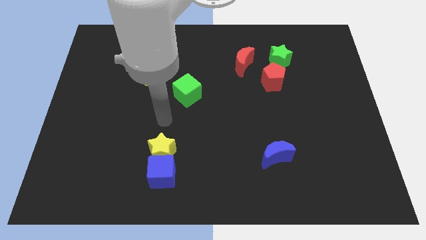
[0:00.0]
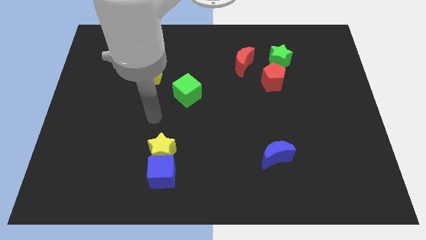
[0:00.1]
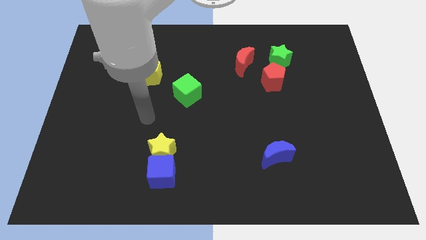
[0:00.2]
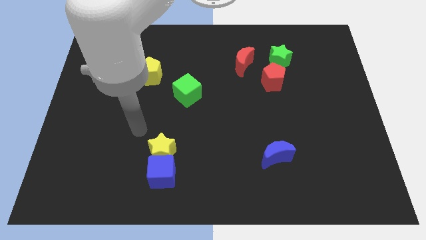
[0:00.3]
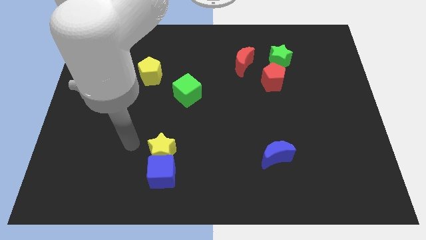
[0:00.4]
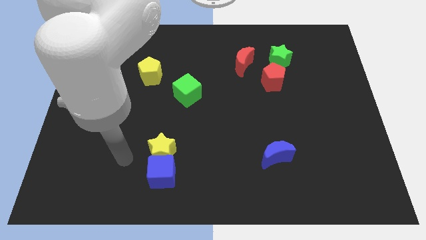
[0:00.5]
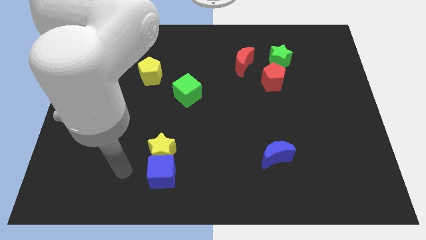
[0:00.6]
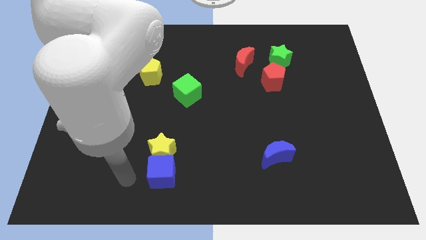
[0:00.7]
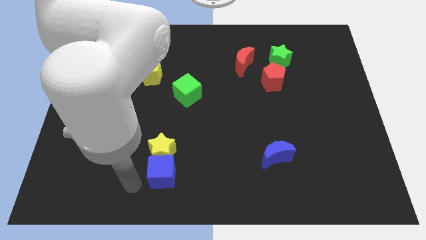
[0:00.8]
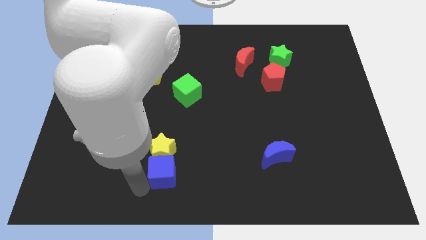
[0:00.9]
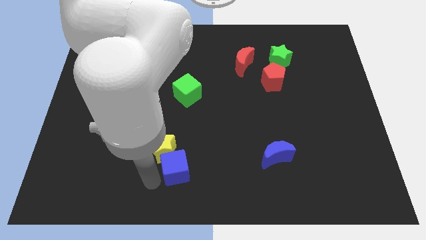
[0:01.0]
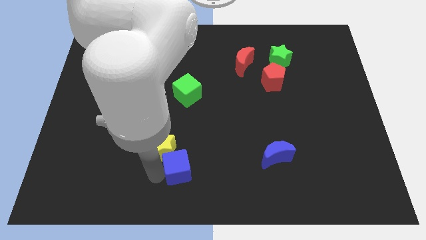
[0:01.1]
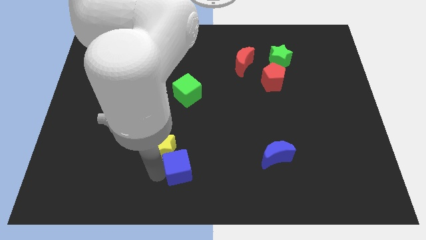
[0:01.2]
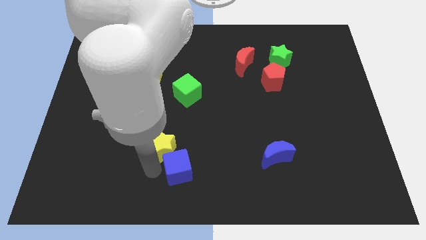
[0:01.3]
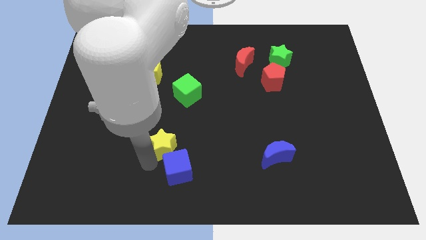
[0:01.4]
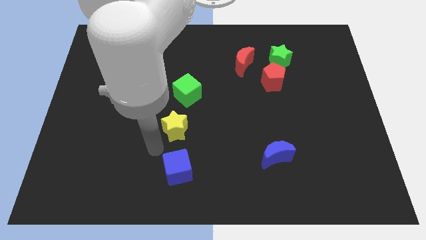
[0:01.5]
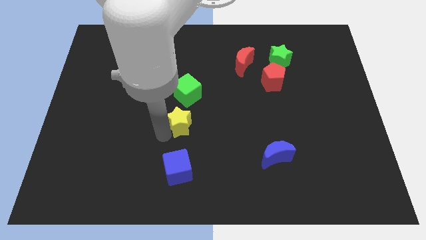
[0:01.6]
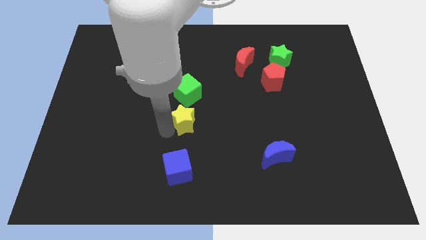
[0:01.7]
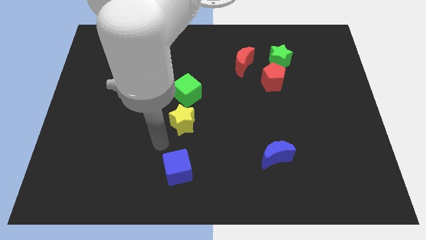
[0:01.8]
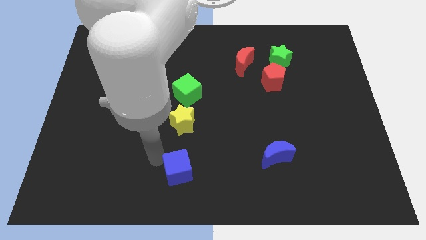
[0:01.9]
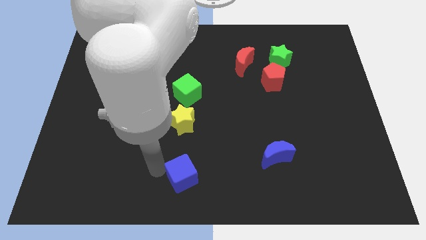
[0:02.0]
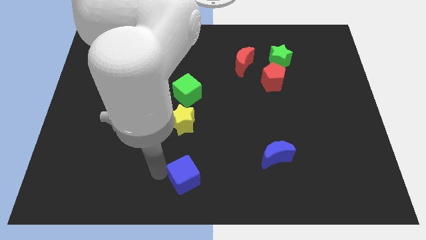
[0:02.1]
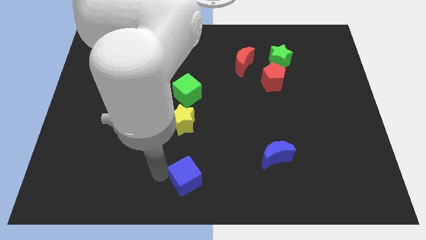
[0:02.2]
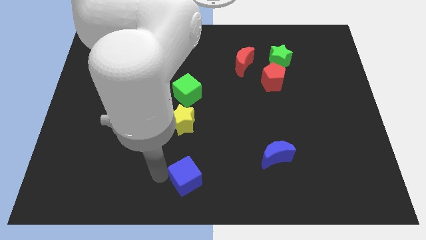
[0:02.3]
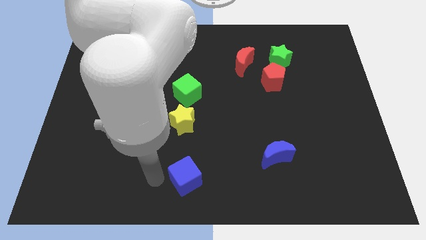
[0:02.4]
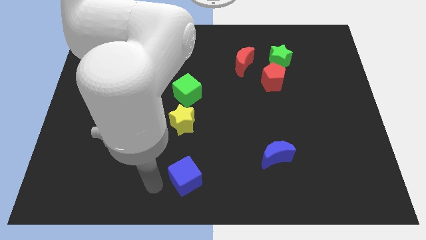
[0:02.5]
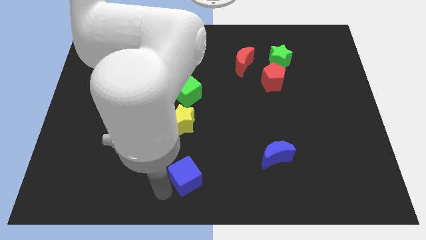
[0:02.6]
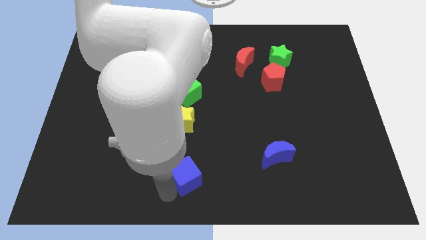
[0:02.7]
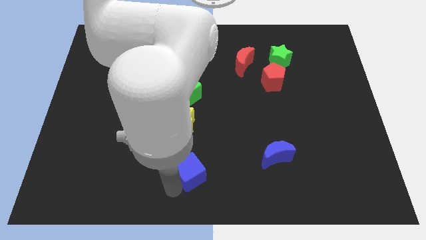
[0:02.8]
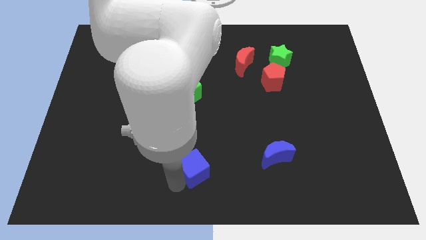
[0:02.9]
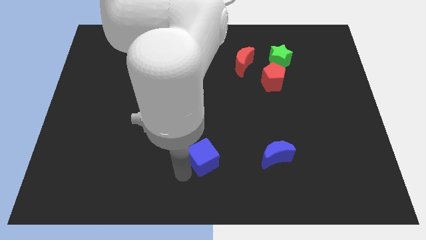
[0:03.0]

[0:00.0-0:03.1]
separate the blue cube and the yellow star

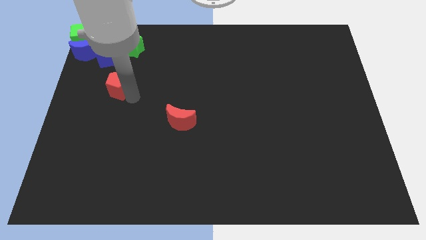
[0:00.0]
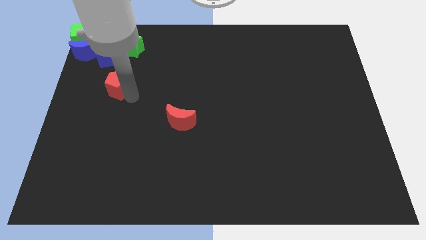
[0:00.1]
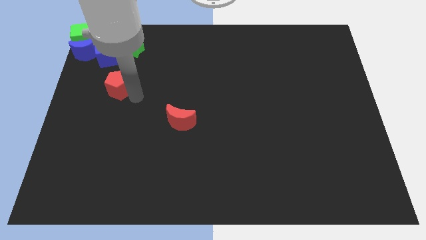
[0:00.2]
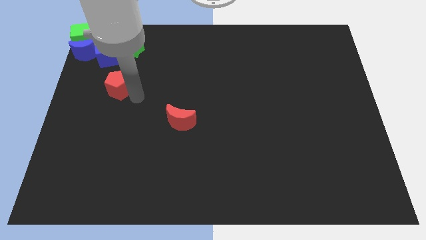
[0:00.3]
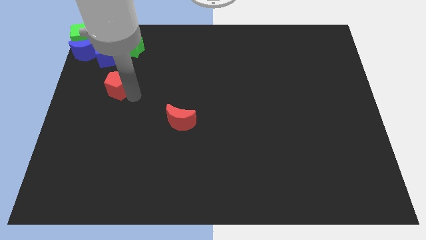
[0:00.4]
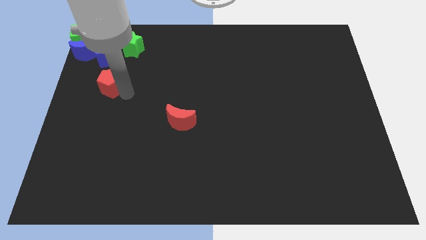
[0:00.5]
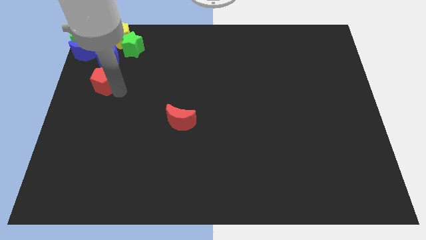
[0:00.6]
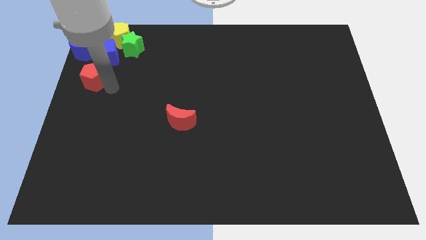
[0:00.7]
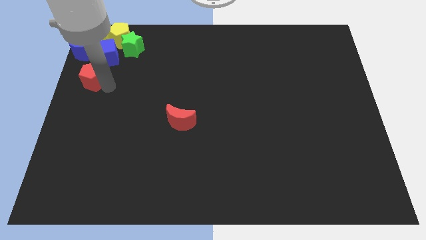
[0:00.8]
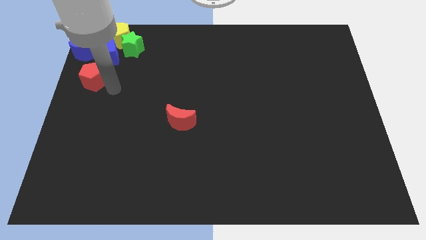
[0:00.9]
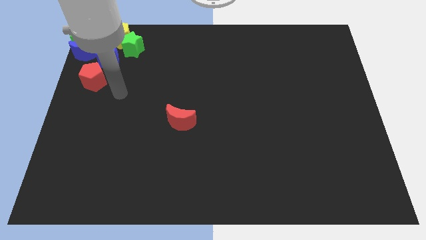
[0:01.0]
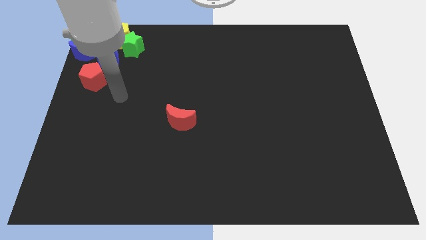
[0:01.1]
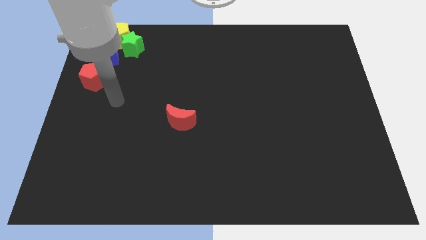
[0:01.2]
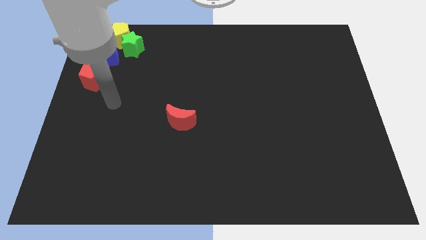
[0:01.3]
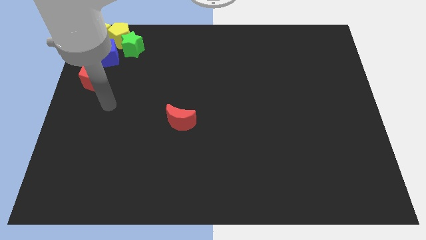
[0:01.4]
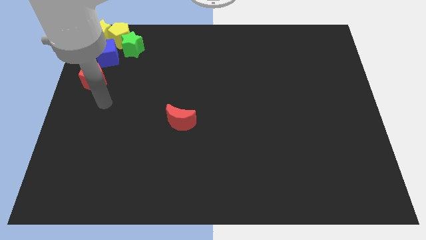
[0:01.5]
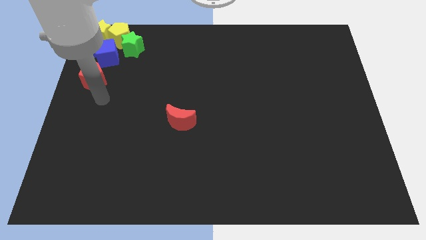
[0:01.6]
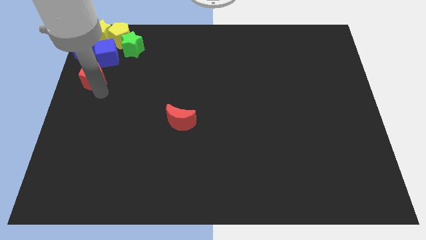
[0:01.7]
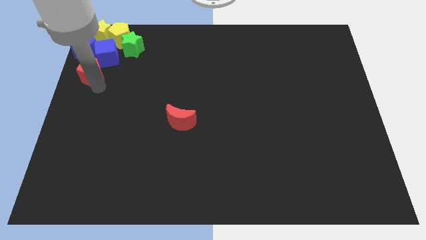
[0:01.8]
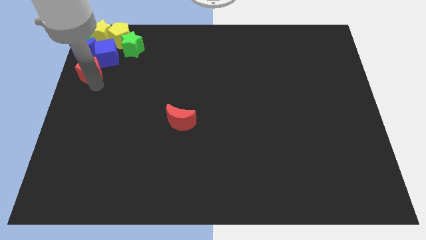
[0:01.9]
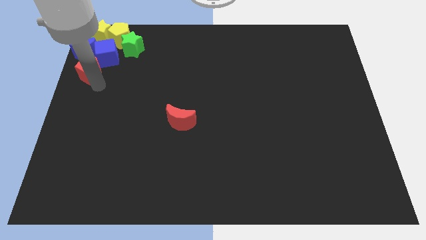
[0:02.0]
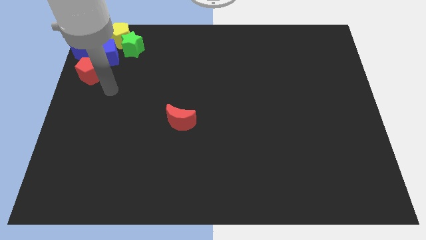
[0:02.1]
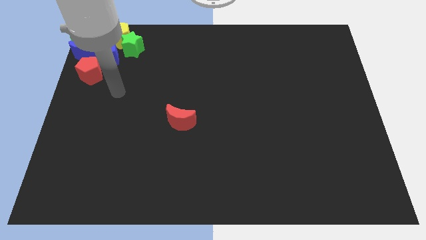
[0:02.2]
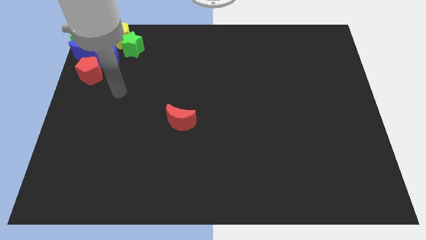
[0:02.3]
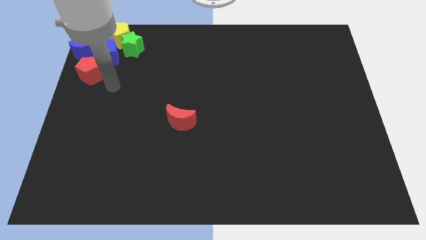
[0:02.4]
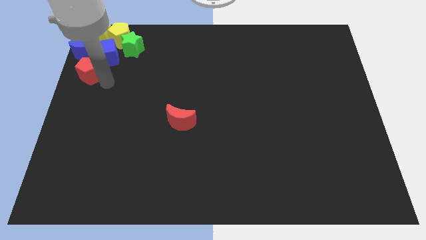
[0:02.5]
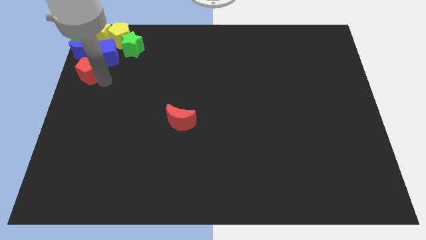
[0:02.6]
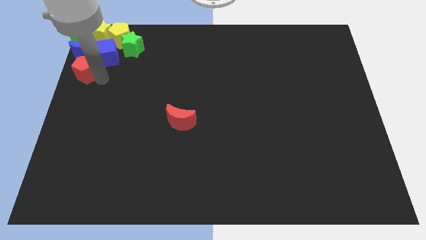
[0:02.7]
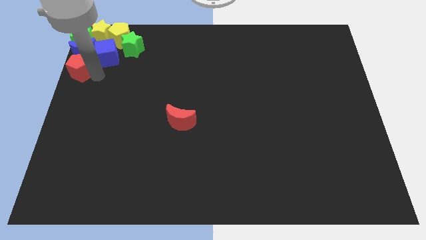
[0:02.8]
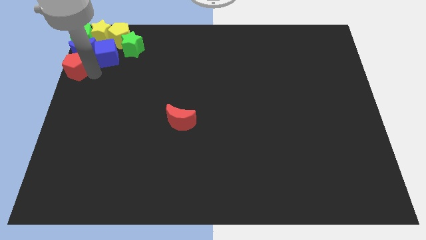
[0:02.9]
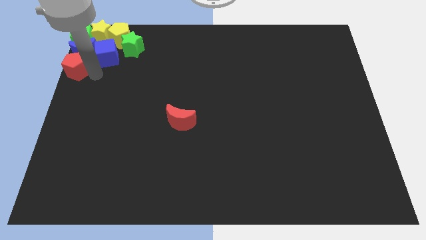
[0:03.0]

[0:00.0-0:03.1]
place the red pentagon at the bottom of the blue moon vertically

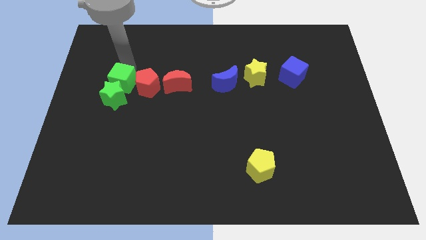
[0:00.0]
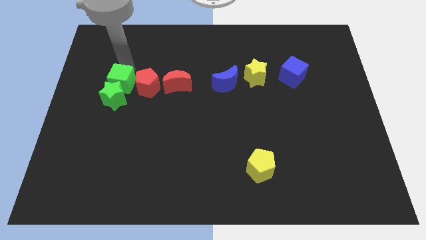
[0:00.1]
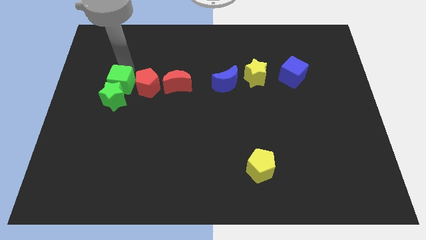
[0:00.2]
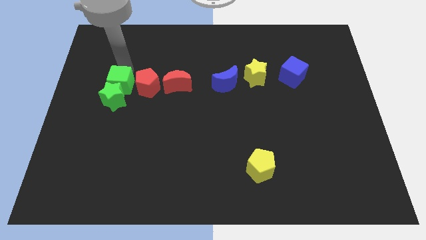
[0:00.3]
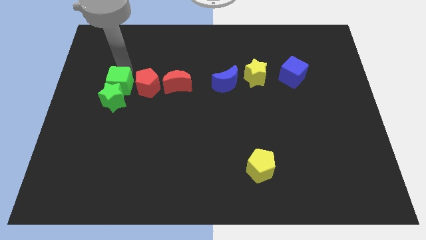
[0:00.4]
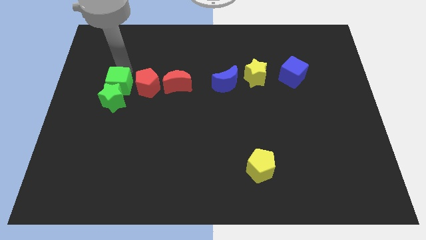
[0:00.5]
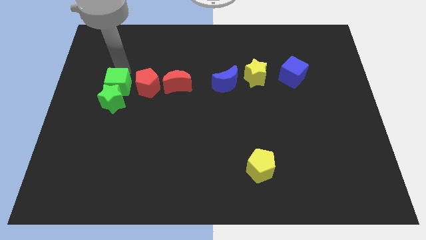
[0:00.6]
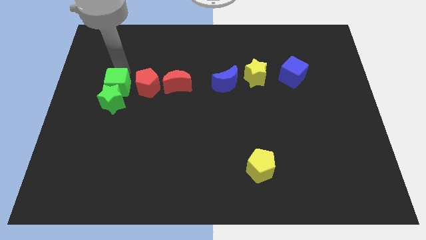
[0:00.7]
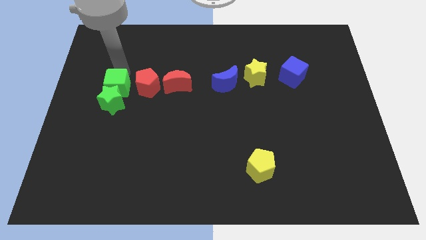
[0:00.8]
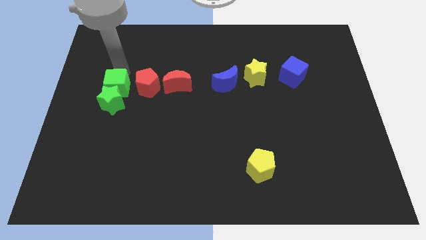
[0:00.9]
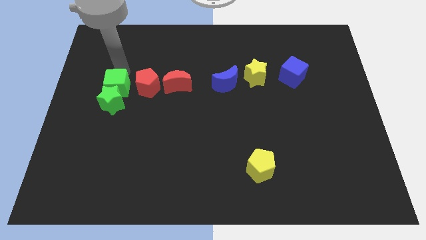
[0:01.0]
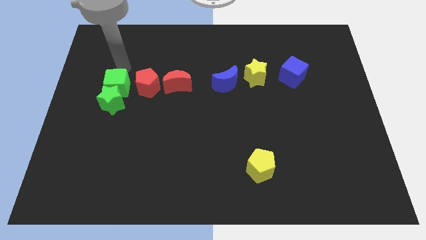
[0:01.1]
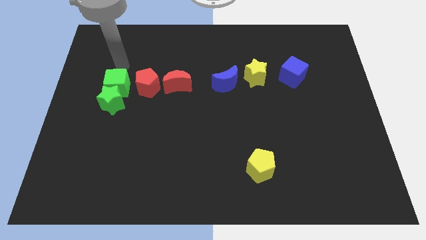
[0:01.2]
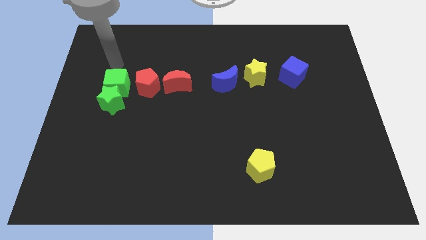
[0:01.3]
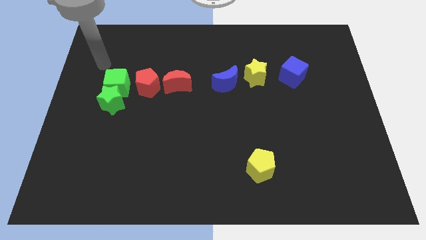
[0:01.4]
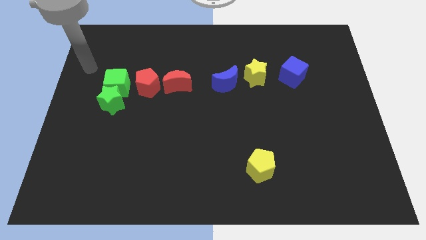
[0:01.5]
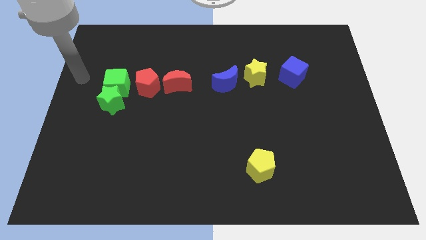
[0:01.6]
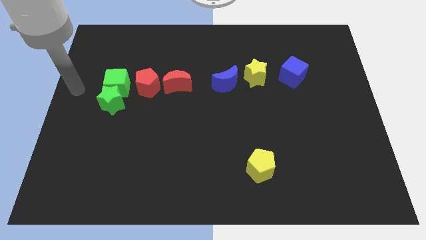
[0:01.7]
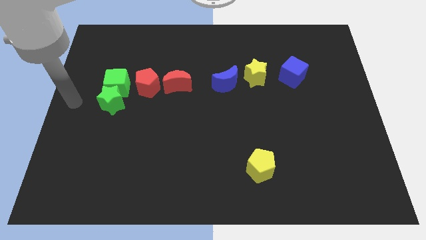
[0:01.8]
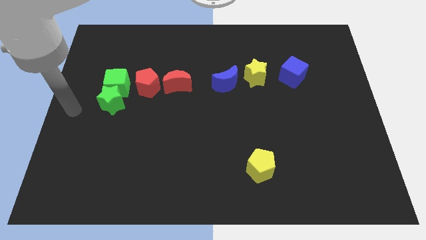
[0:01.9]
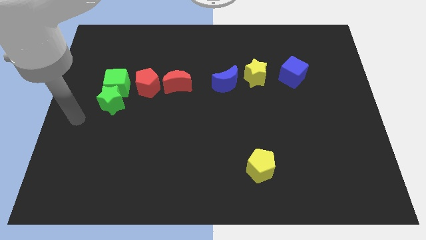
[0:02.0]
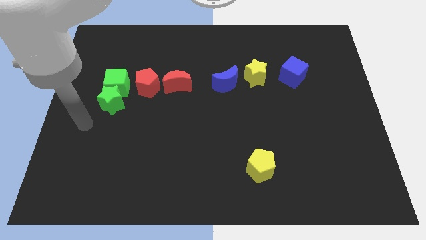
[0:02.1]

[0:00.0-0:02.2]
push green star with green cube

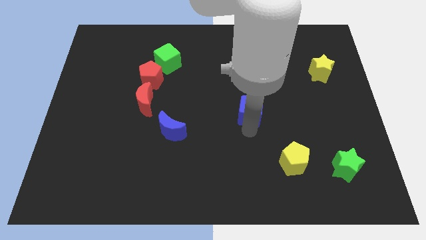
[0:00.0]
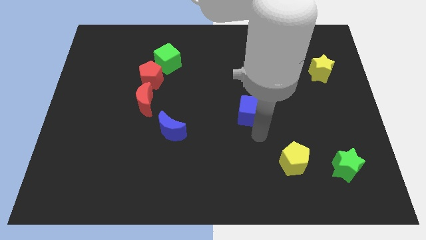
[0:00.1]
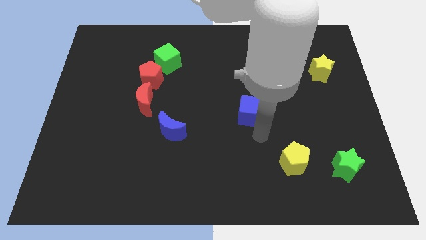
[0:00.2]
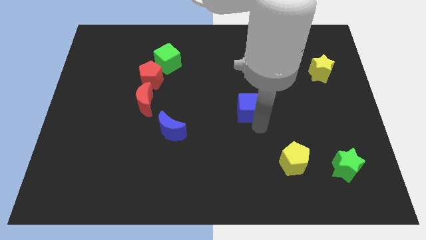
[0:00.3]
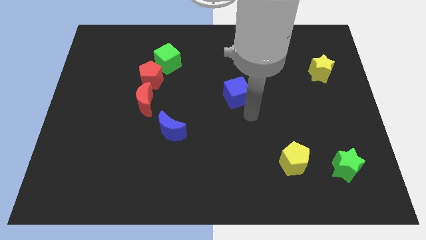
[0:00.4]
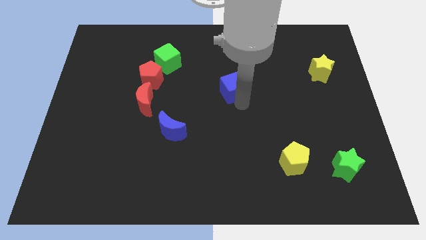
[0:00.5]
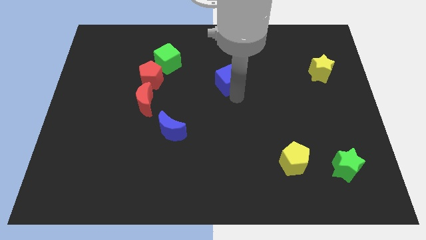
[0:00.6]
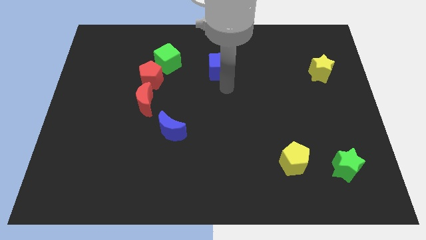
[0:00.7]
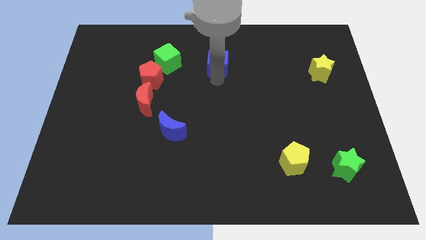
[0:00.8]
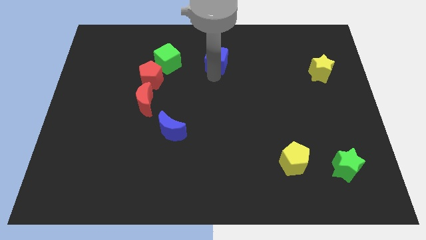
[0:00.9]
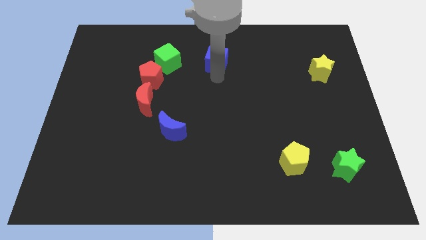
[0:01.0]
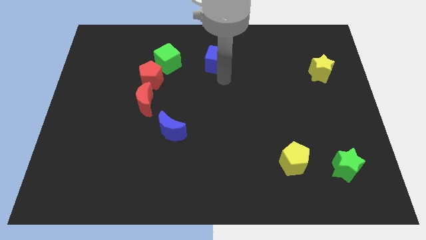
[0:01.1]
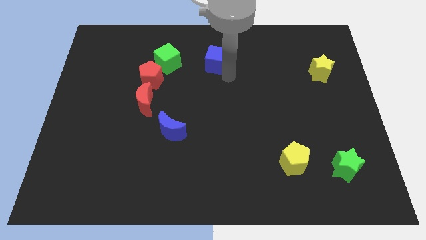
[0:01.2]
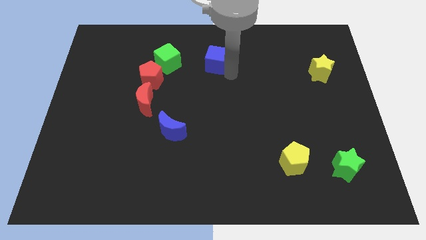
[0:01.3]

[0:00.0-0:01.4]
push the blue cube to the top side of the board
